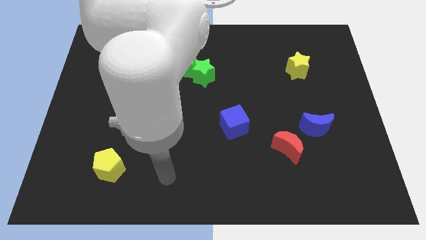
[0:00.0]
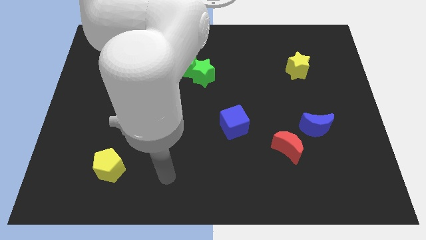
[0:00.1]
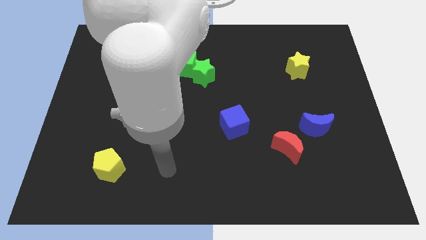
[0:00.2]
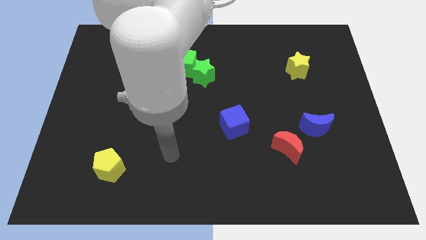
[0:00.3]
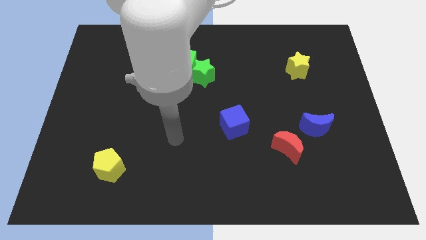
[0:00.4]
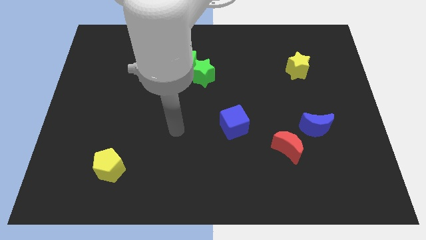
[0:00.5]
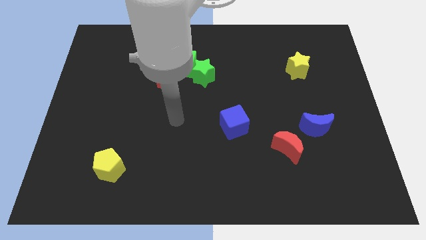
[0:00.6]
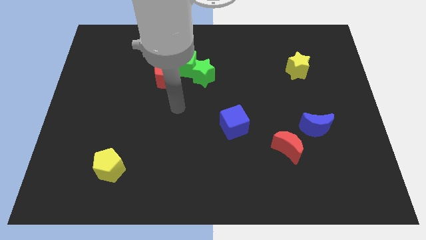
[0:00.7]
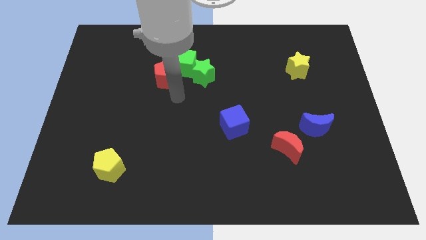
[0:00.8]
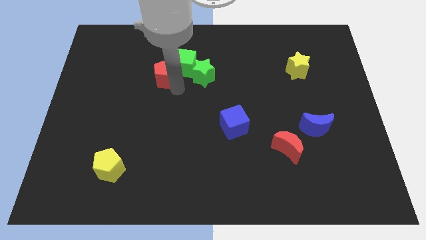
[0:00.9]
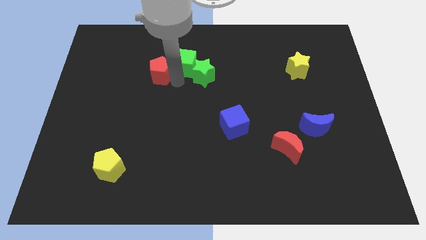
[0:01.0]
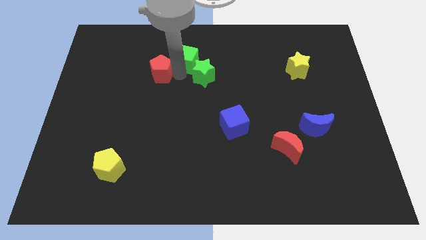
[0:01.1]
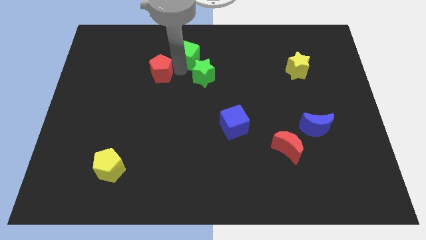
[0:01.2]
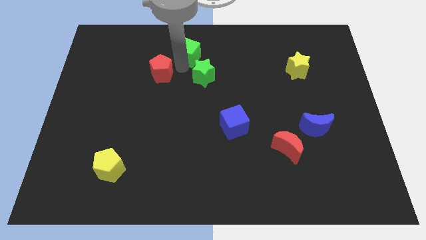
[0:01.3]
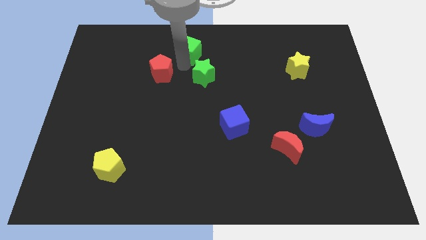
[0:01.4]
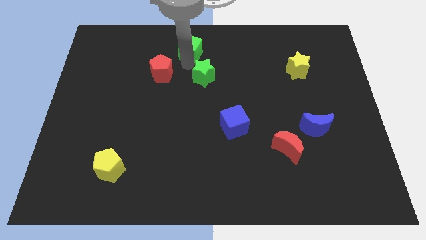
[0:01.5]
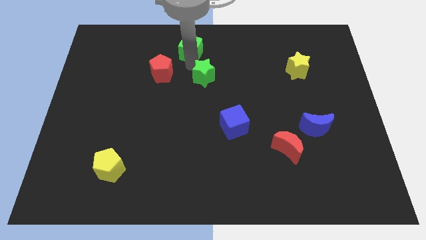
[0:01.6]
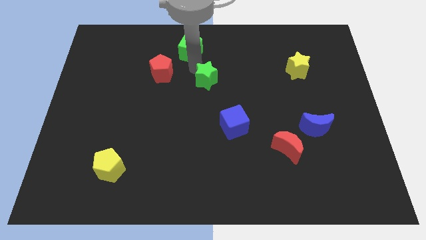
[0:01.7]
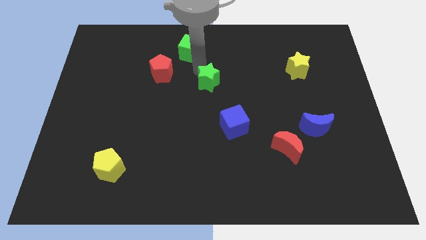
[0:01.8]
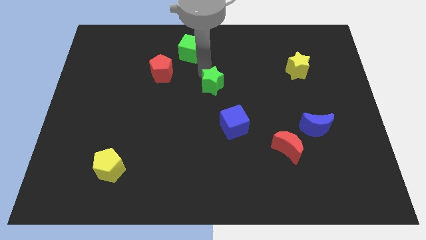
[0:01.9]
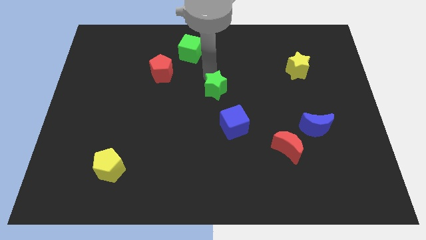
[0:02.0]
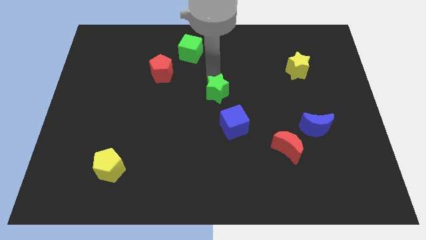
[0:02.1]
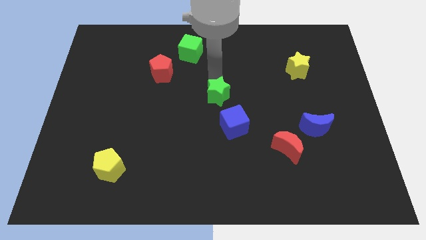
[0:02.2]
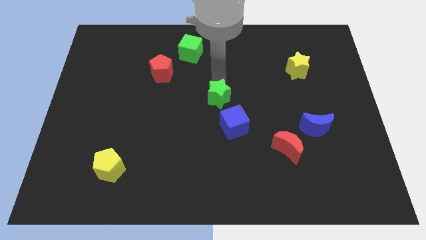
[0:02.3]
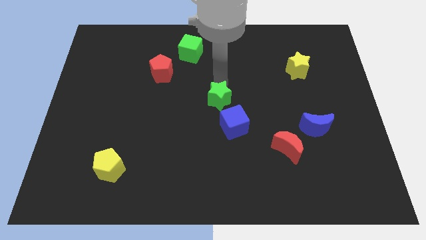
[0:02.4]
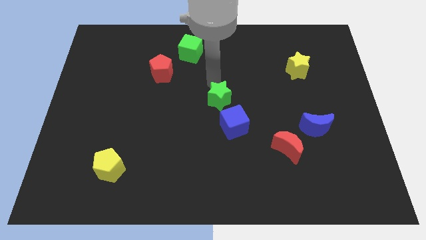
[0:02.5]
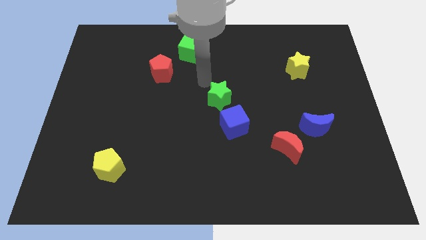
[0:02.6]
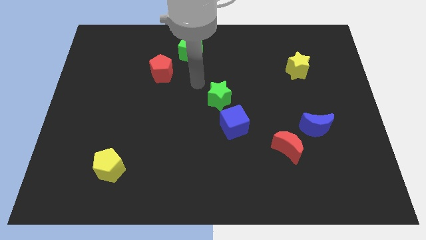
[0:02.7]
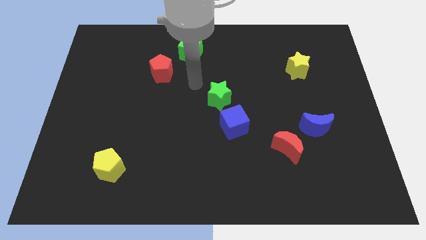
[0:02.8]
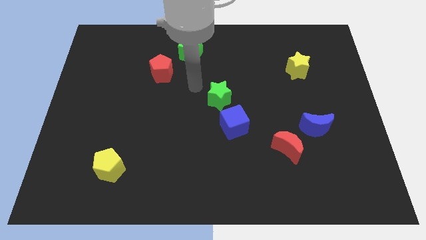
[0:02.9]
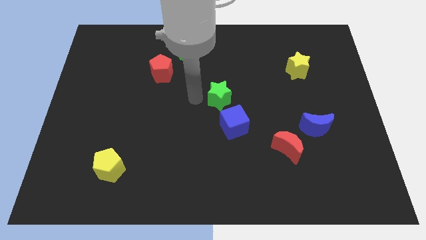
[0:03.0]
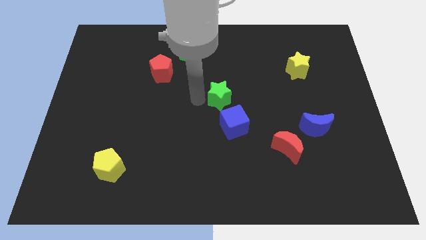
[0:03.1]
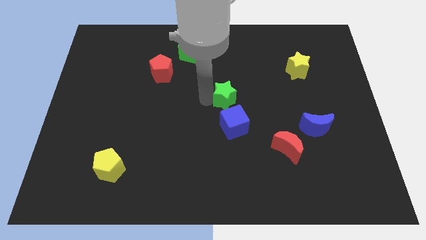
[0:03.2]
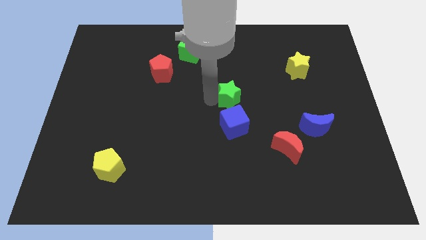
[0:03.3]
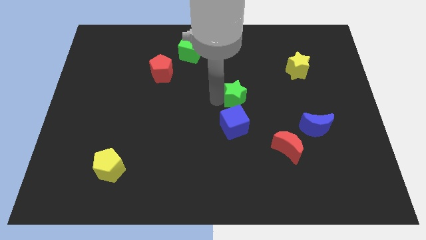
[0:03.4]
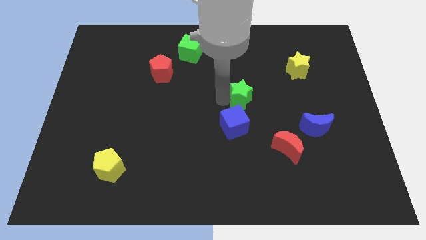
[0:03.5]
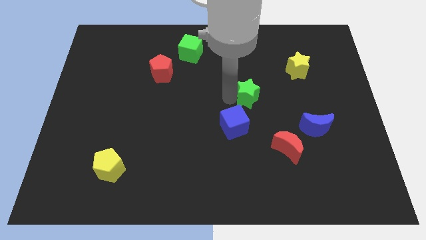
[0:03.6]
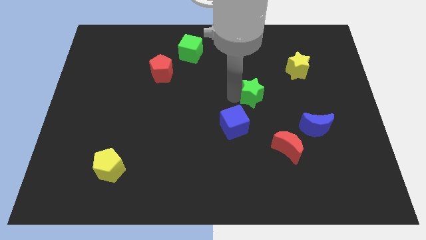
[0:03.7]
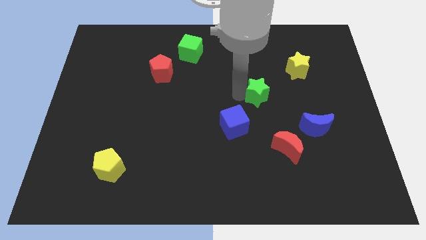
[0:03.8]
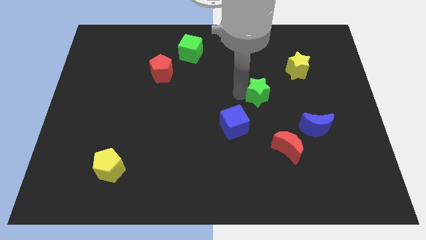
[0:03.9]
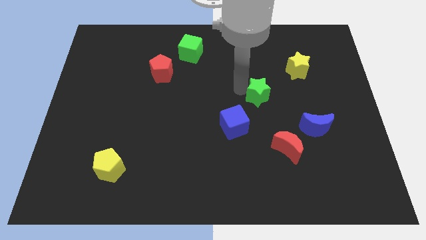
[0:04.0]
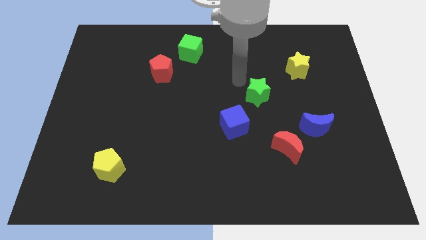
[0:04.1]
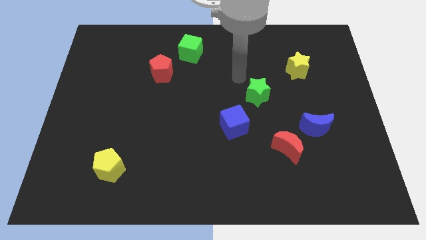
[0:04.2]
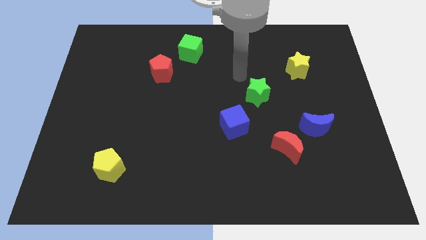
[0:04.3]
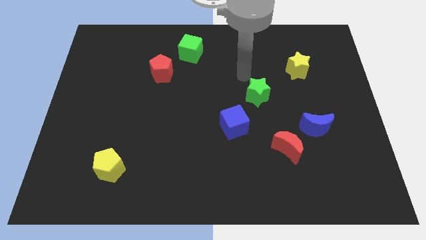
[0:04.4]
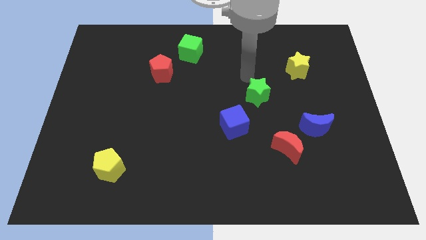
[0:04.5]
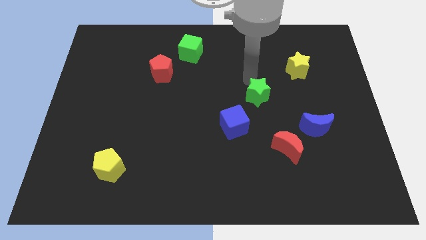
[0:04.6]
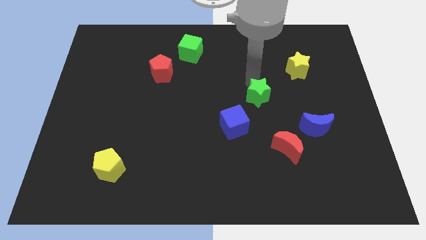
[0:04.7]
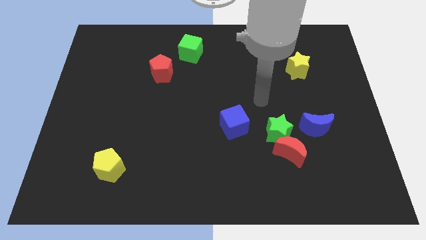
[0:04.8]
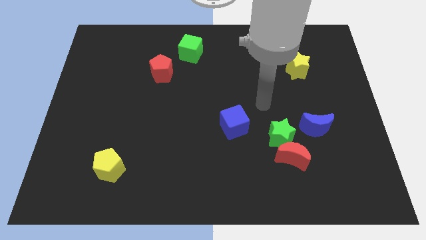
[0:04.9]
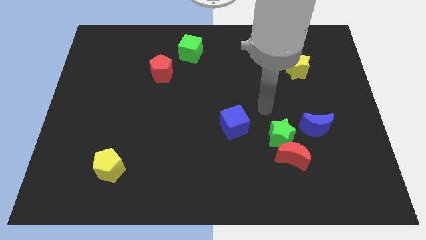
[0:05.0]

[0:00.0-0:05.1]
put the green star close to the red moon

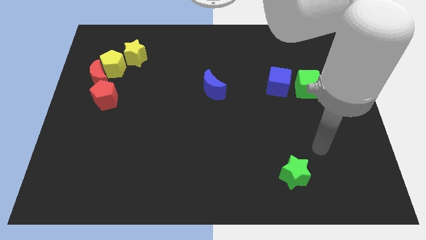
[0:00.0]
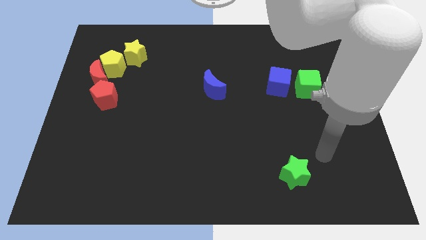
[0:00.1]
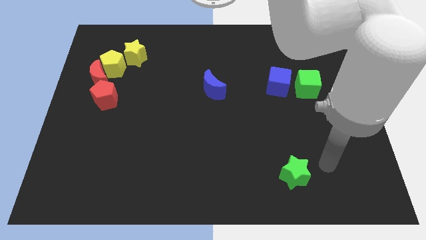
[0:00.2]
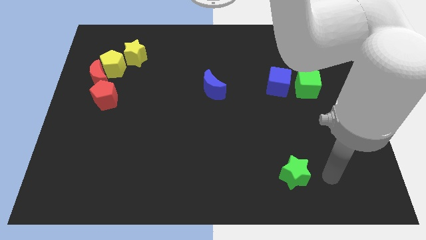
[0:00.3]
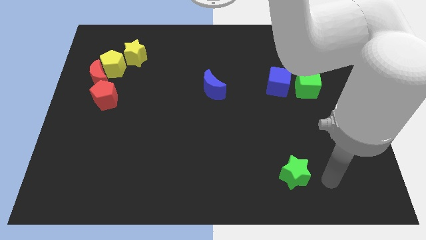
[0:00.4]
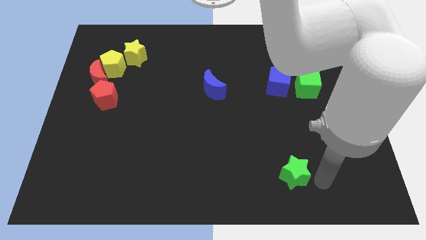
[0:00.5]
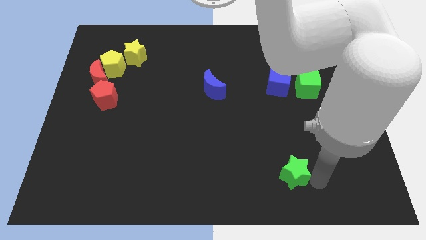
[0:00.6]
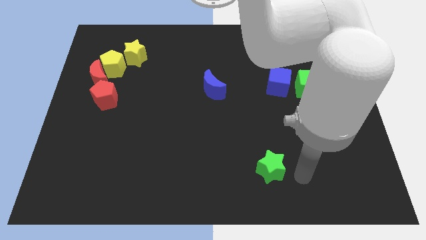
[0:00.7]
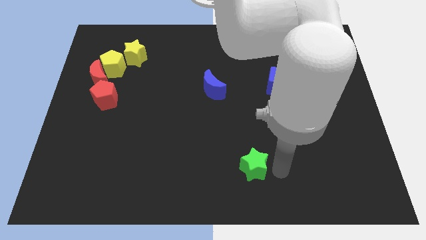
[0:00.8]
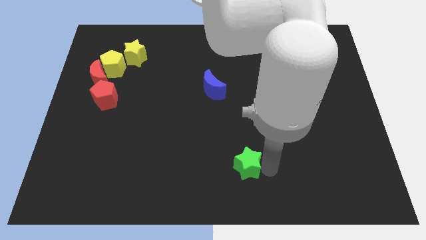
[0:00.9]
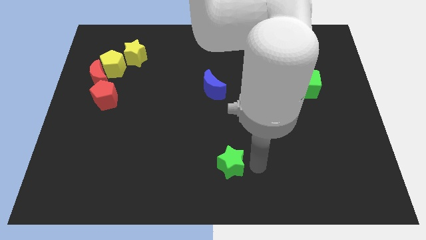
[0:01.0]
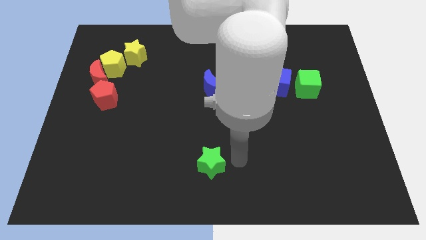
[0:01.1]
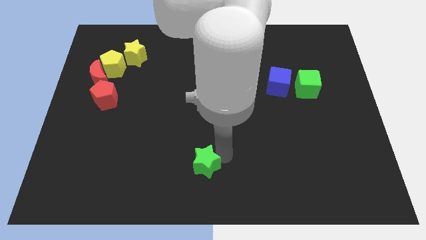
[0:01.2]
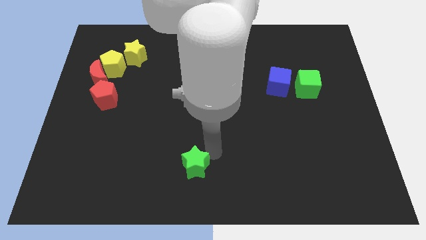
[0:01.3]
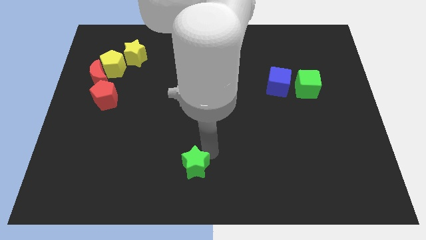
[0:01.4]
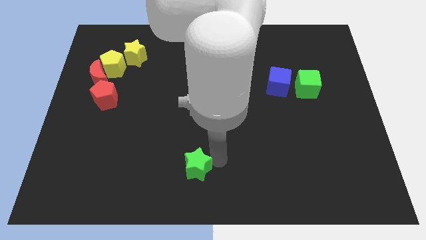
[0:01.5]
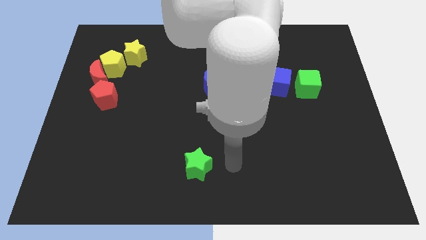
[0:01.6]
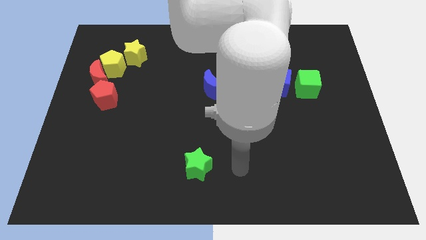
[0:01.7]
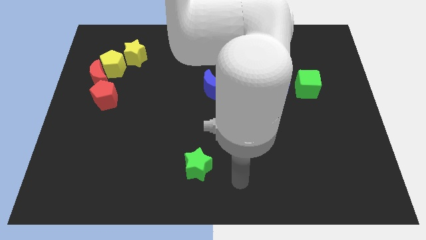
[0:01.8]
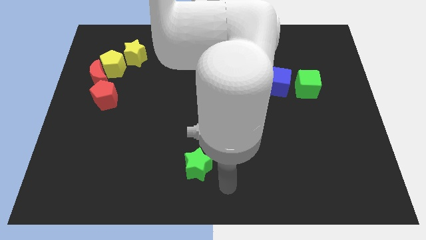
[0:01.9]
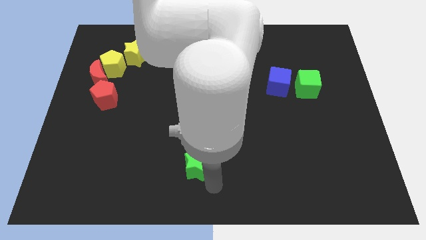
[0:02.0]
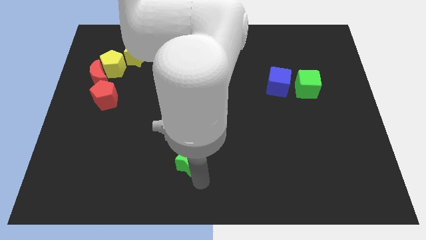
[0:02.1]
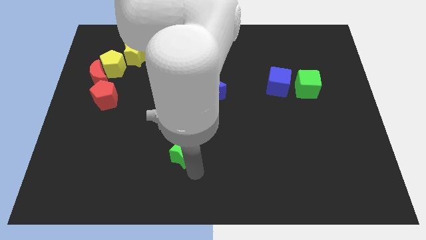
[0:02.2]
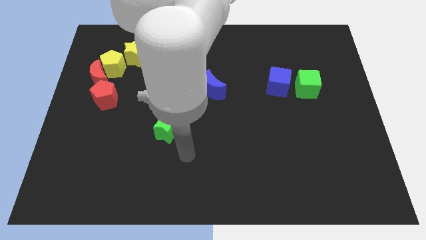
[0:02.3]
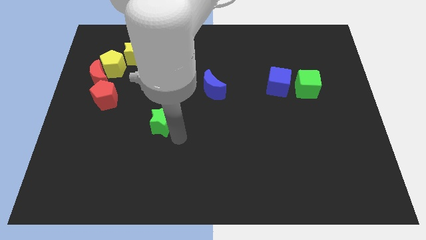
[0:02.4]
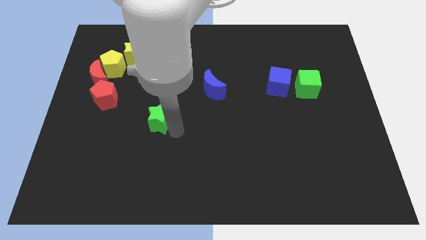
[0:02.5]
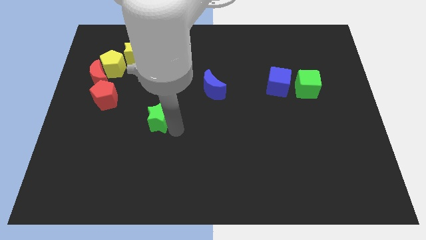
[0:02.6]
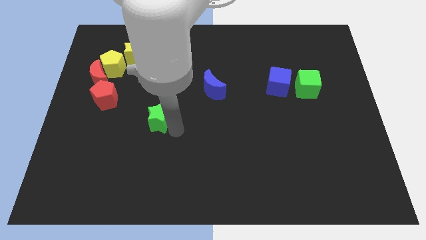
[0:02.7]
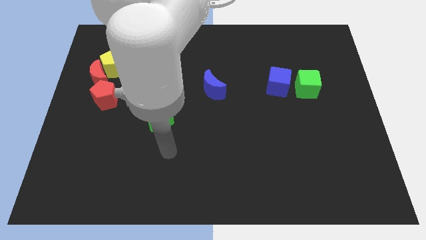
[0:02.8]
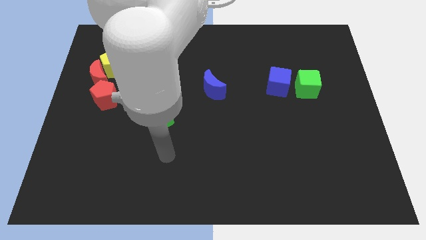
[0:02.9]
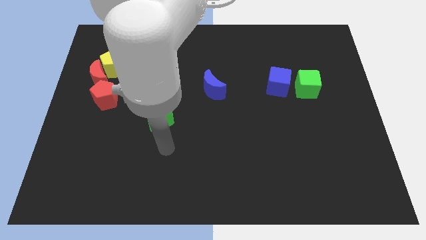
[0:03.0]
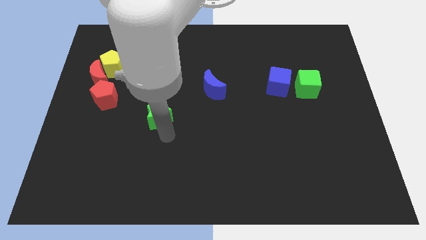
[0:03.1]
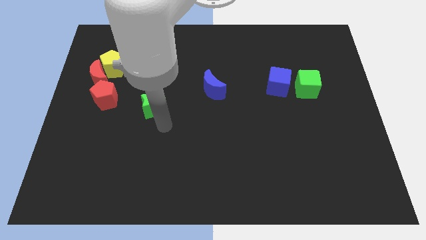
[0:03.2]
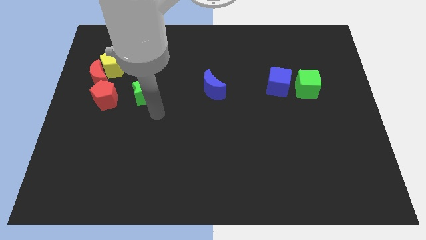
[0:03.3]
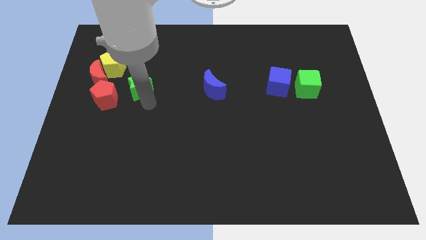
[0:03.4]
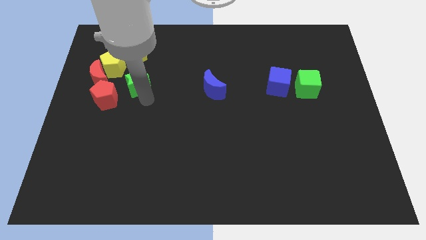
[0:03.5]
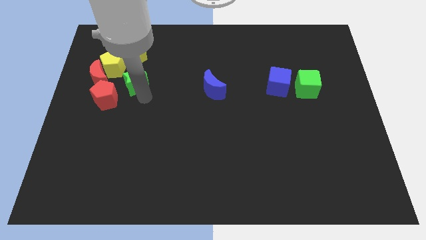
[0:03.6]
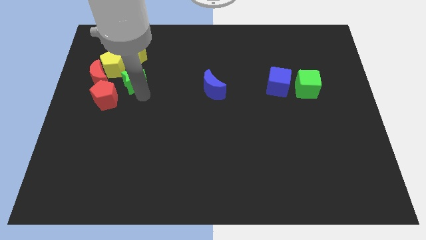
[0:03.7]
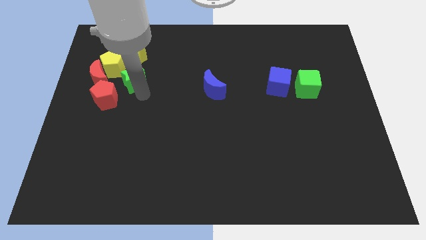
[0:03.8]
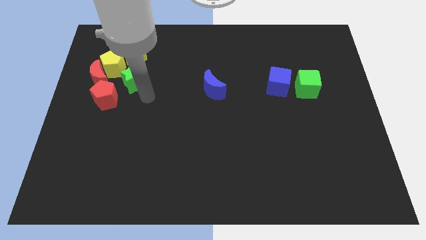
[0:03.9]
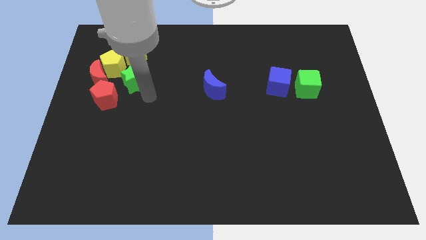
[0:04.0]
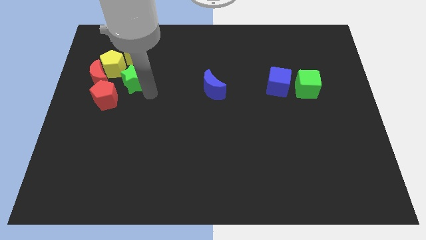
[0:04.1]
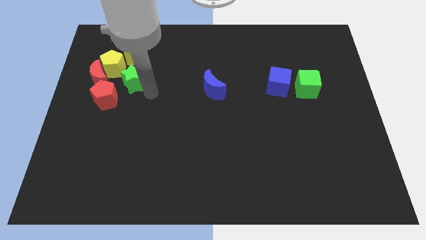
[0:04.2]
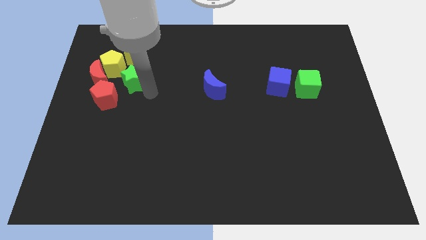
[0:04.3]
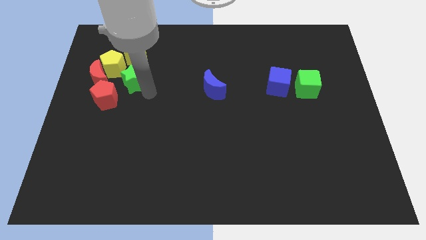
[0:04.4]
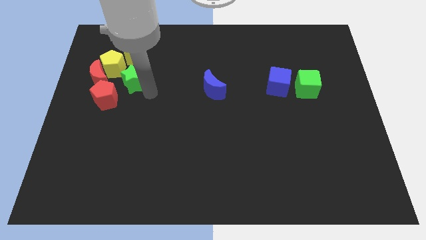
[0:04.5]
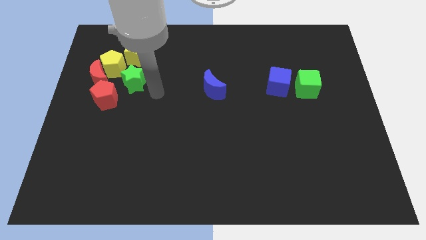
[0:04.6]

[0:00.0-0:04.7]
move the green star close to the red moon
